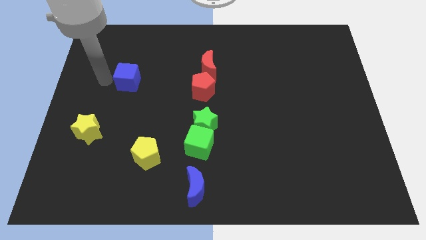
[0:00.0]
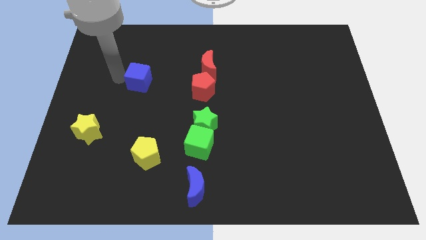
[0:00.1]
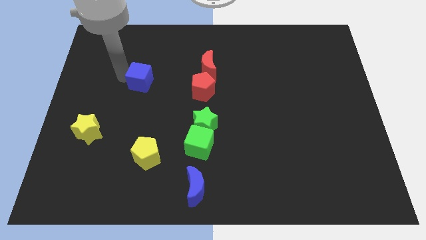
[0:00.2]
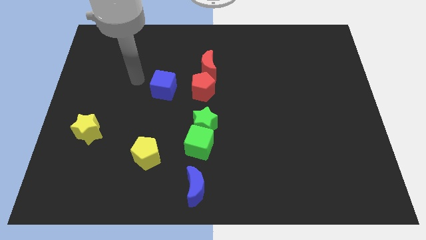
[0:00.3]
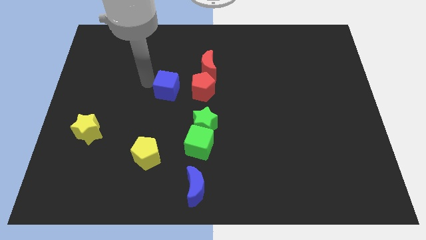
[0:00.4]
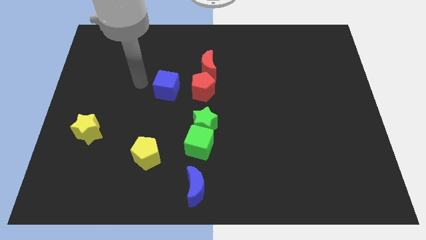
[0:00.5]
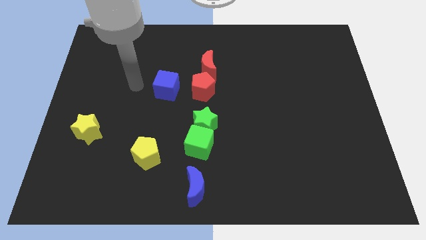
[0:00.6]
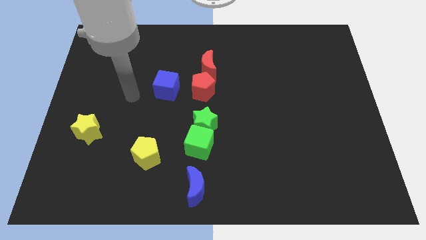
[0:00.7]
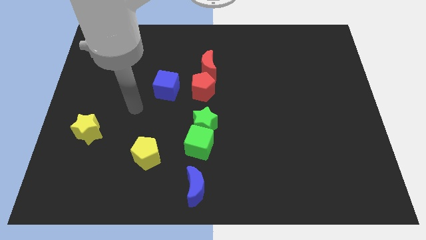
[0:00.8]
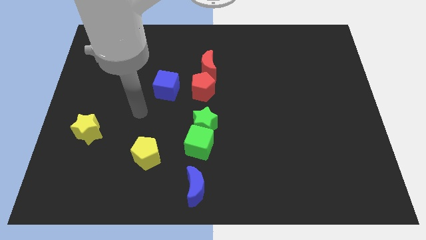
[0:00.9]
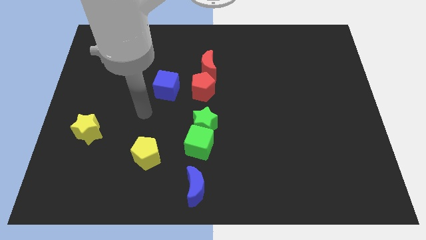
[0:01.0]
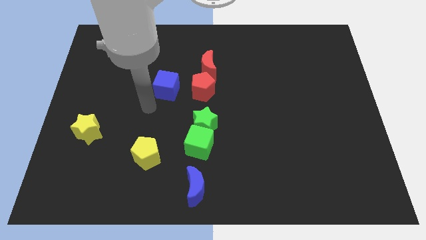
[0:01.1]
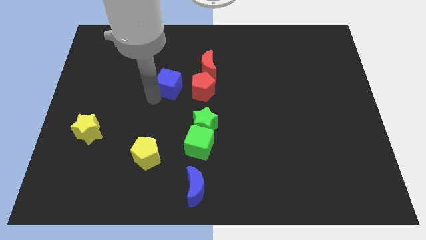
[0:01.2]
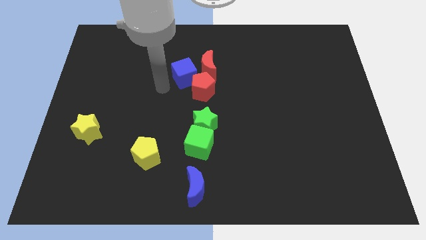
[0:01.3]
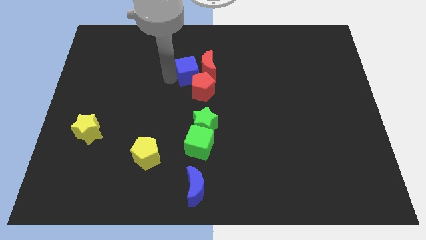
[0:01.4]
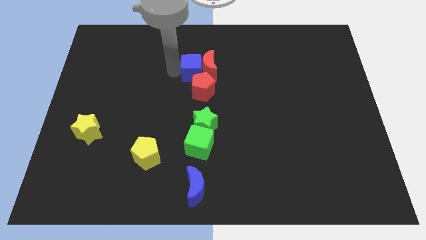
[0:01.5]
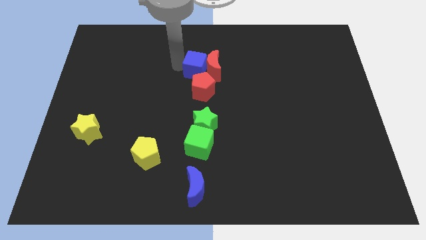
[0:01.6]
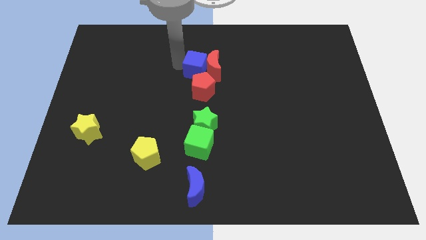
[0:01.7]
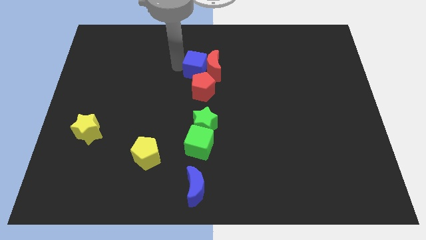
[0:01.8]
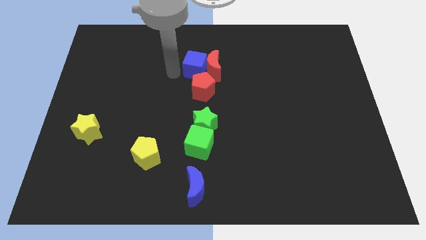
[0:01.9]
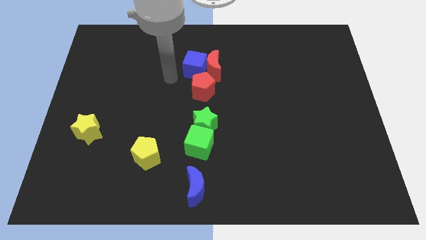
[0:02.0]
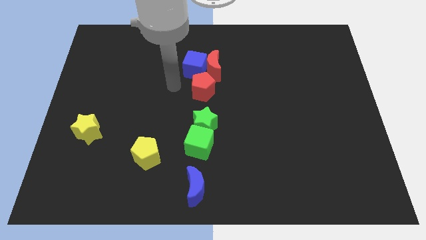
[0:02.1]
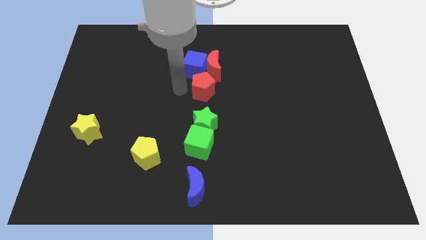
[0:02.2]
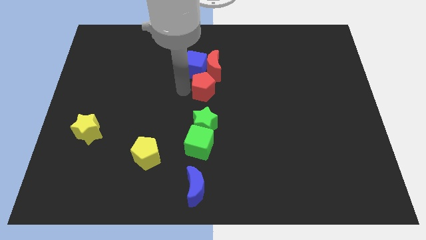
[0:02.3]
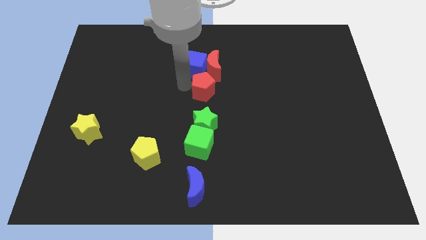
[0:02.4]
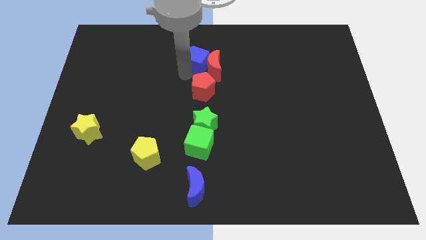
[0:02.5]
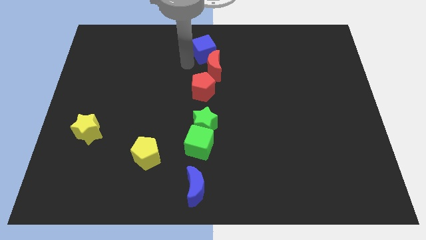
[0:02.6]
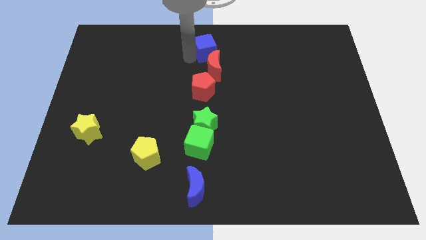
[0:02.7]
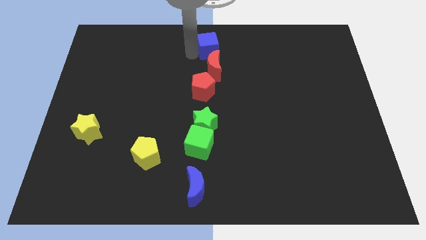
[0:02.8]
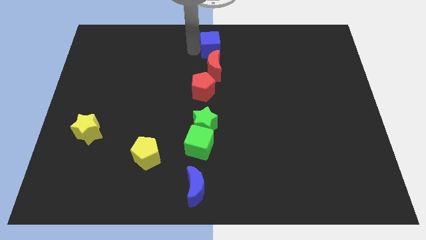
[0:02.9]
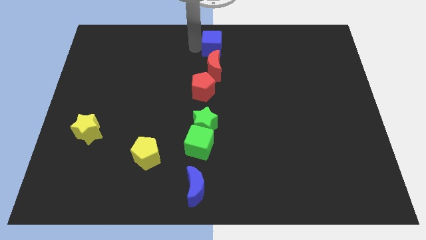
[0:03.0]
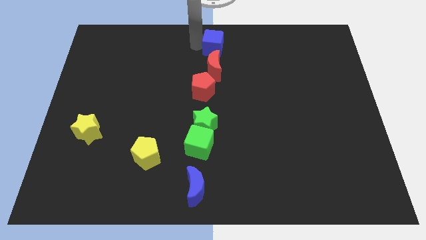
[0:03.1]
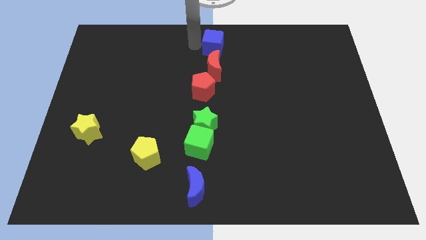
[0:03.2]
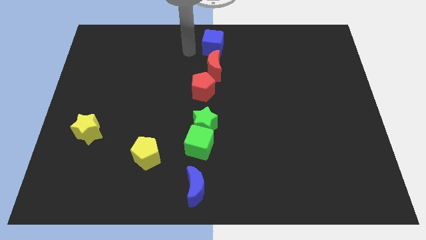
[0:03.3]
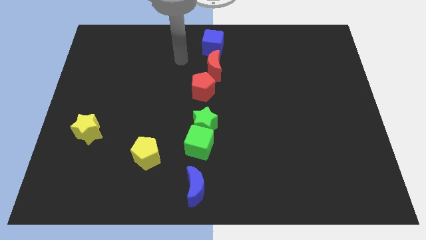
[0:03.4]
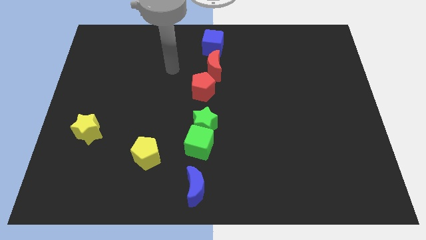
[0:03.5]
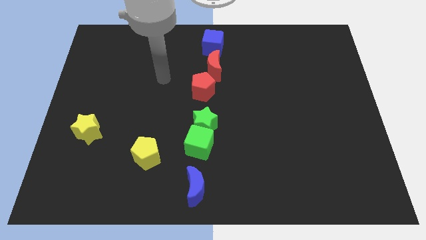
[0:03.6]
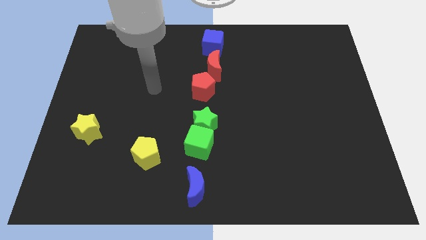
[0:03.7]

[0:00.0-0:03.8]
place the blue cube above the red crescent

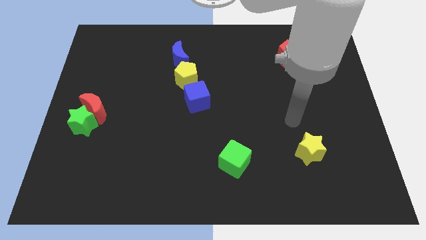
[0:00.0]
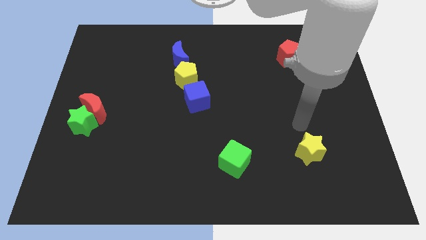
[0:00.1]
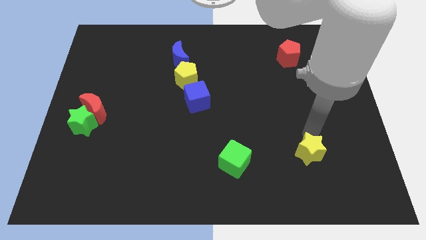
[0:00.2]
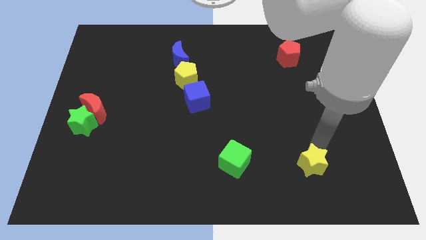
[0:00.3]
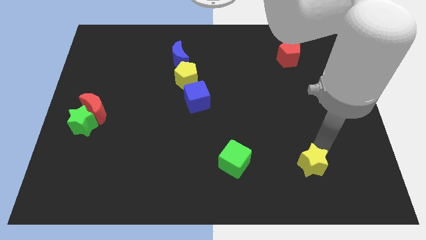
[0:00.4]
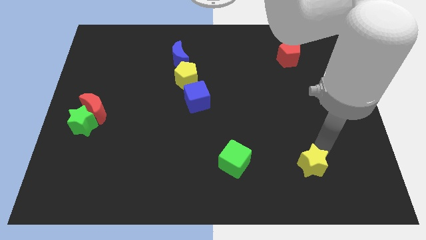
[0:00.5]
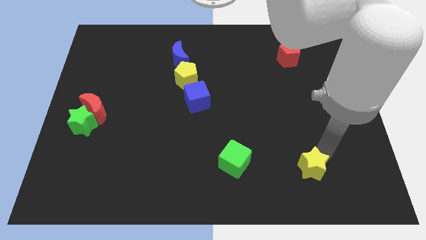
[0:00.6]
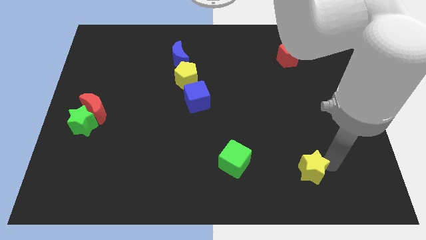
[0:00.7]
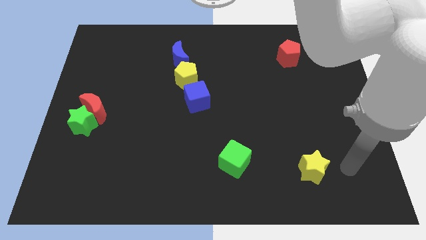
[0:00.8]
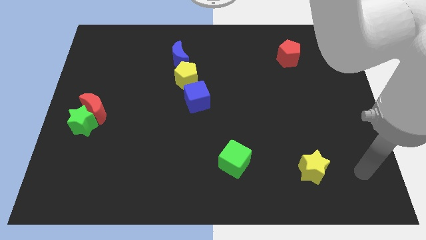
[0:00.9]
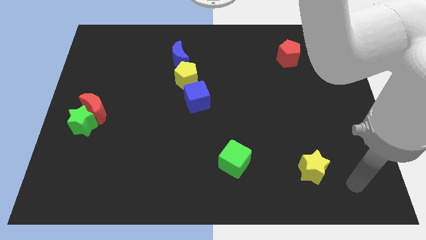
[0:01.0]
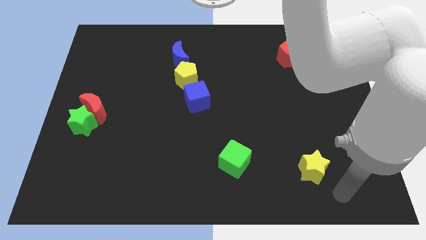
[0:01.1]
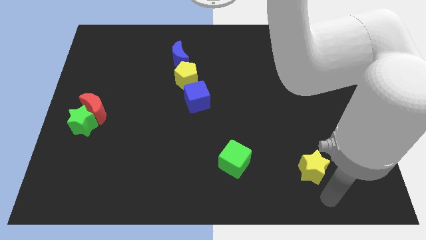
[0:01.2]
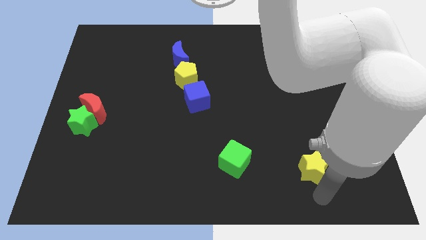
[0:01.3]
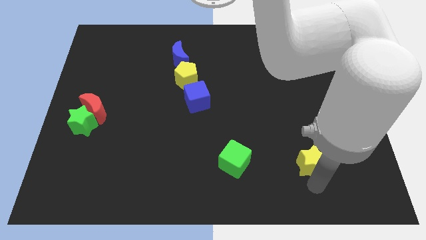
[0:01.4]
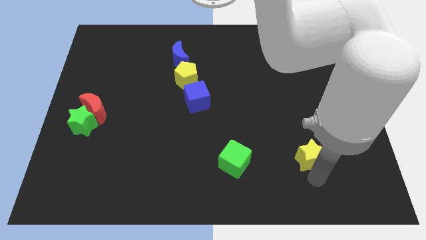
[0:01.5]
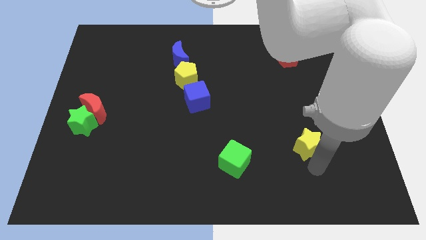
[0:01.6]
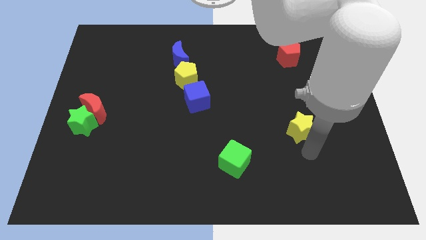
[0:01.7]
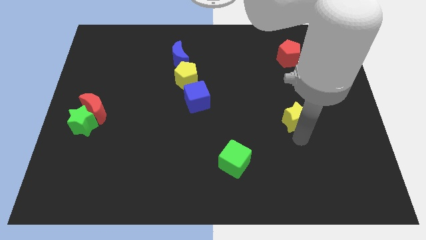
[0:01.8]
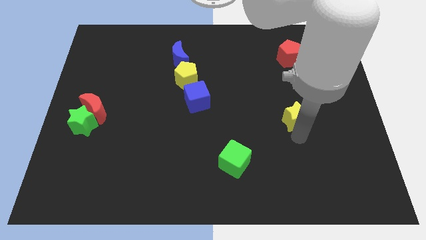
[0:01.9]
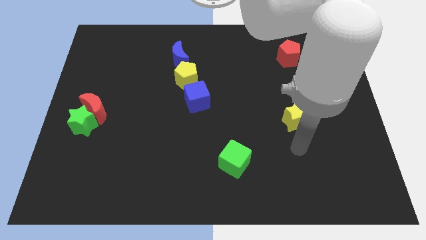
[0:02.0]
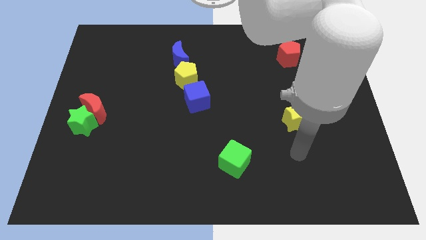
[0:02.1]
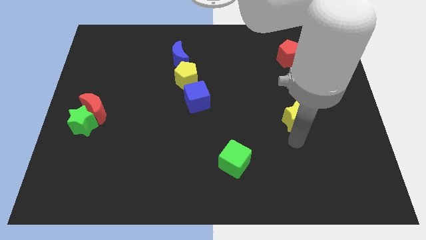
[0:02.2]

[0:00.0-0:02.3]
slightly move the yellow star towards the top of the board

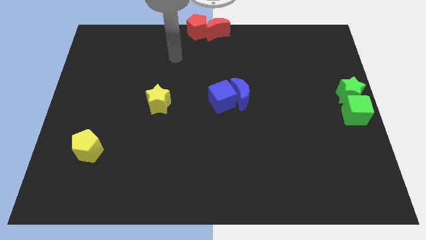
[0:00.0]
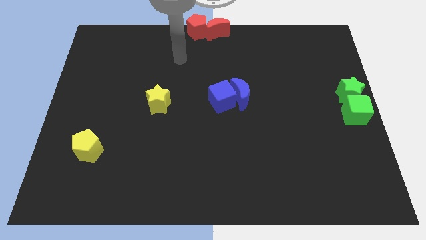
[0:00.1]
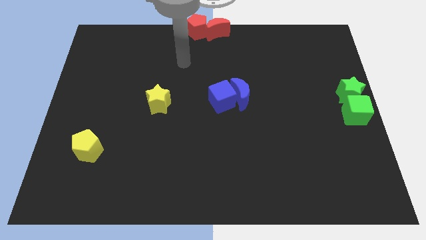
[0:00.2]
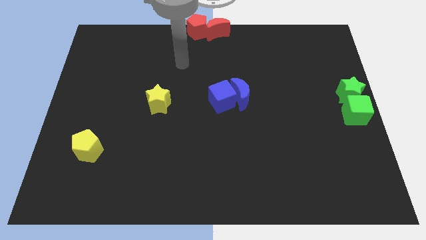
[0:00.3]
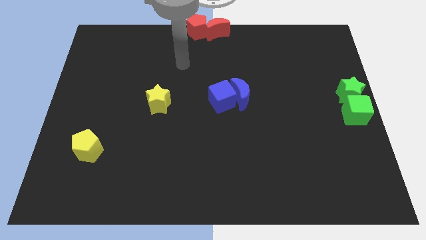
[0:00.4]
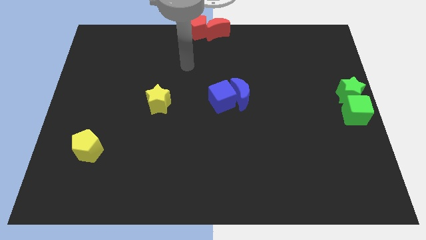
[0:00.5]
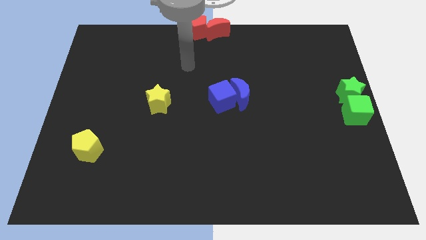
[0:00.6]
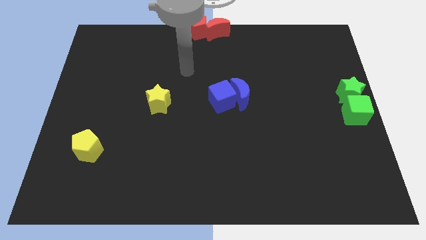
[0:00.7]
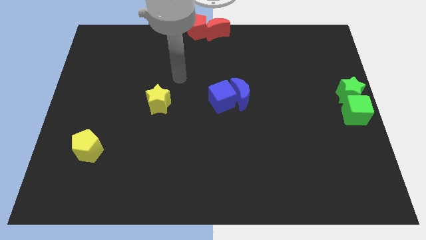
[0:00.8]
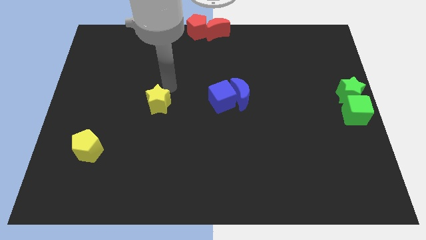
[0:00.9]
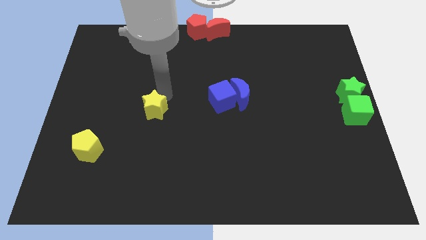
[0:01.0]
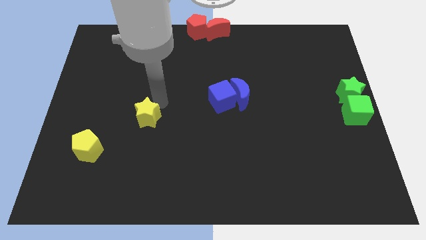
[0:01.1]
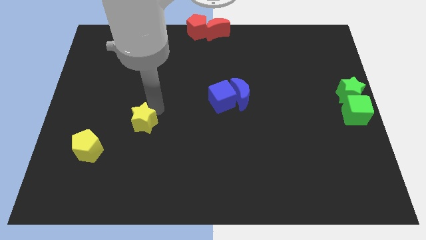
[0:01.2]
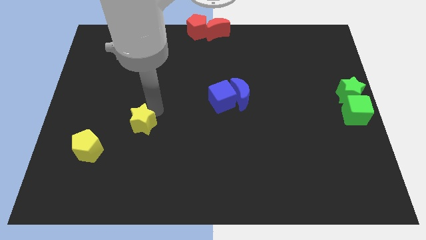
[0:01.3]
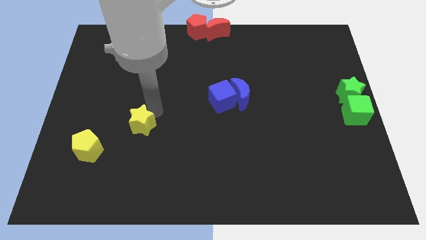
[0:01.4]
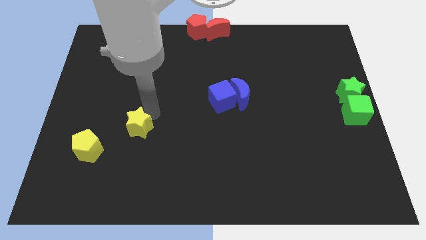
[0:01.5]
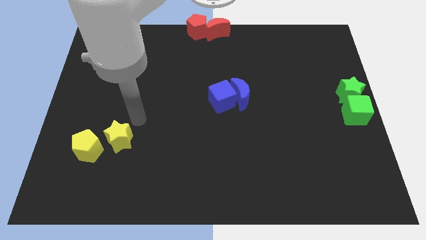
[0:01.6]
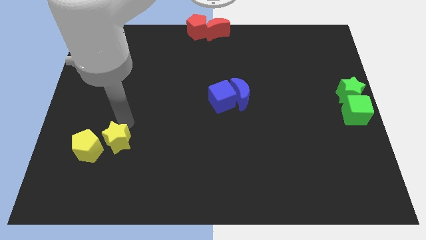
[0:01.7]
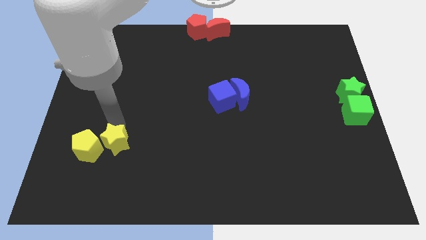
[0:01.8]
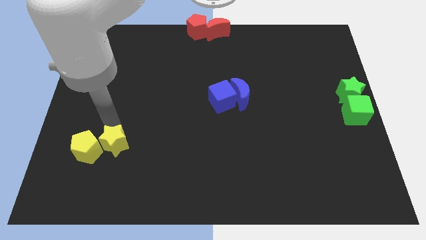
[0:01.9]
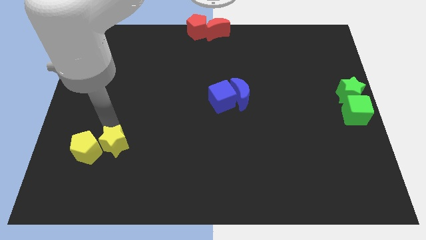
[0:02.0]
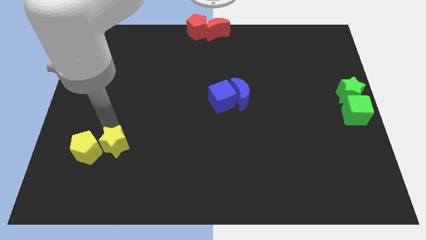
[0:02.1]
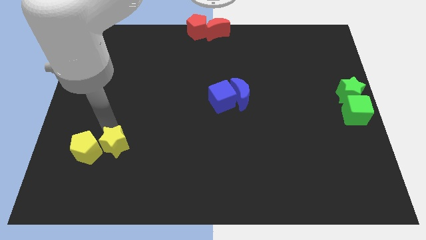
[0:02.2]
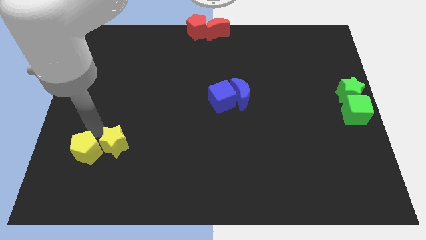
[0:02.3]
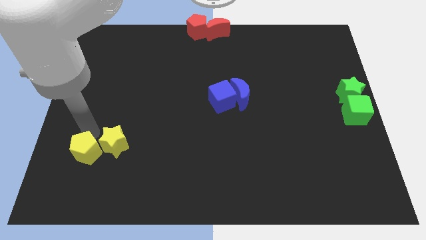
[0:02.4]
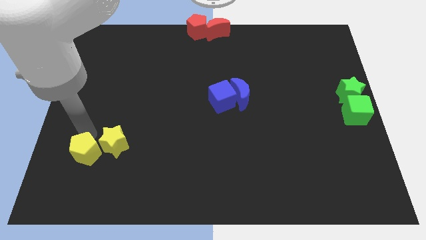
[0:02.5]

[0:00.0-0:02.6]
place the yellow star into the yellow pentagon
